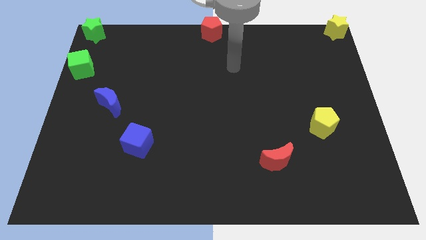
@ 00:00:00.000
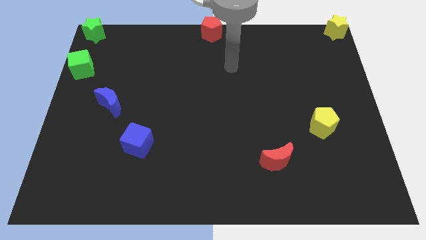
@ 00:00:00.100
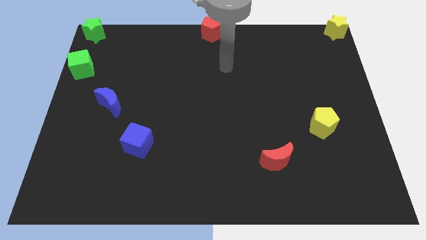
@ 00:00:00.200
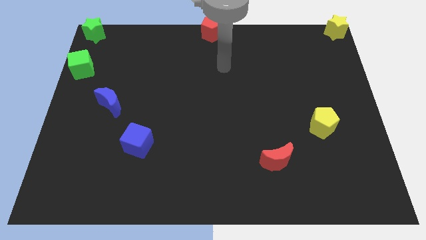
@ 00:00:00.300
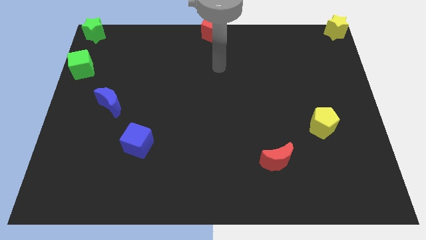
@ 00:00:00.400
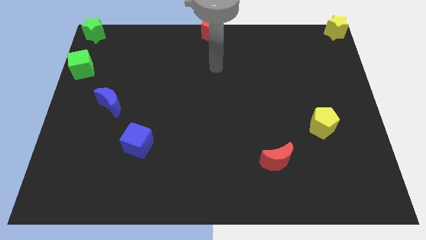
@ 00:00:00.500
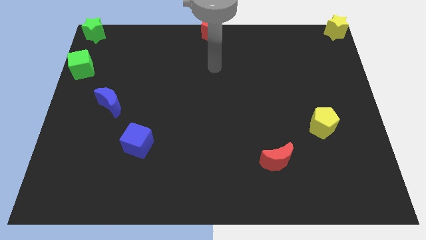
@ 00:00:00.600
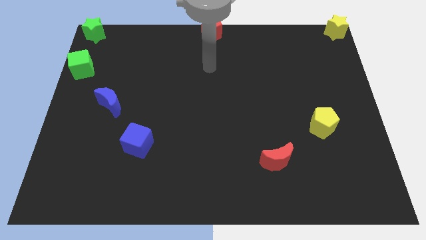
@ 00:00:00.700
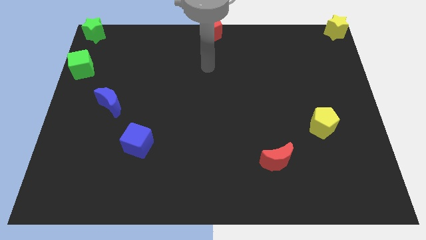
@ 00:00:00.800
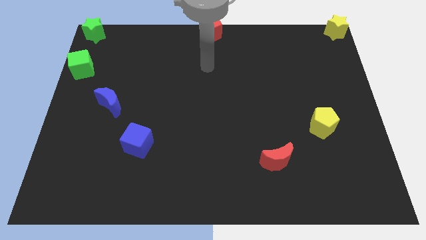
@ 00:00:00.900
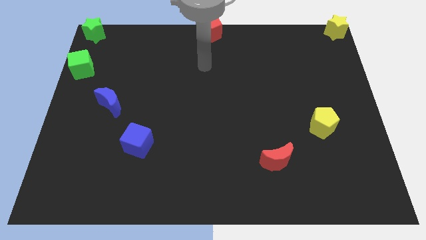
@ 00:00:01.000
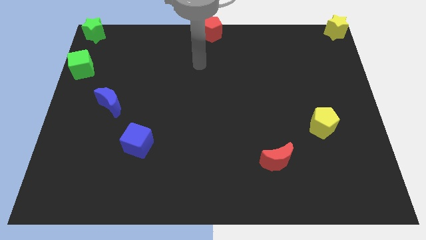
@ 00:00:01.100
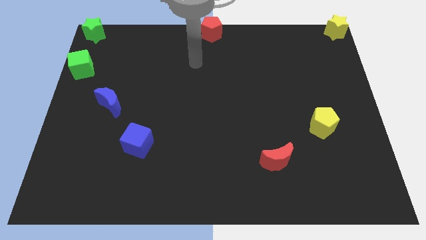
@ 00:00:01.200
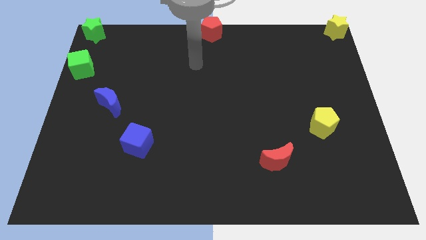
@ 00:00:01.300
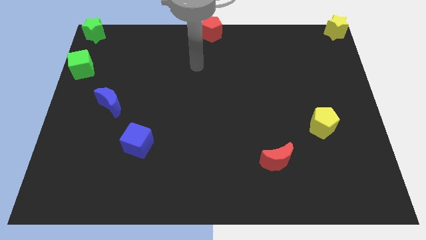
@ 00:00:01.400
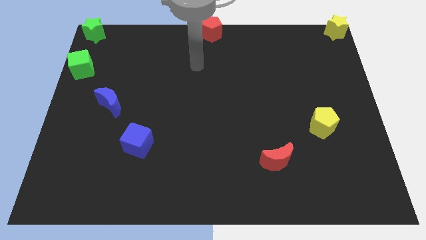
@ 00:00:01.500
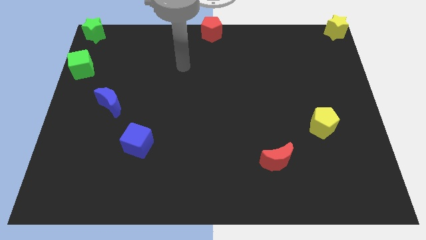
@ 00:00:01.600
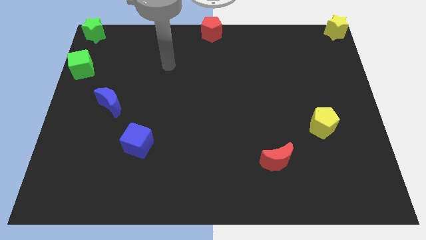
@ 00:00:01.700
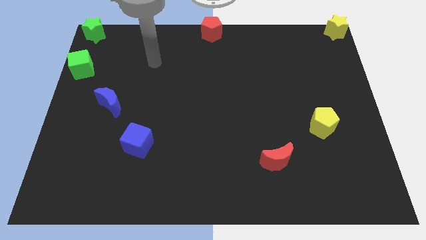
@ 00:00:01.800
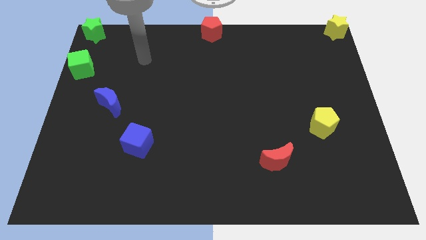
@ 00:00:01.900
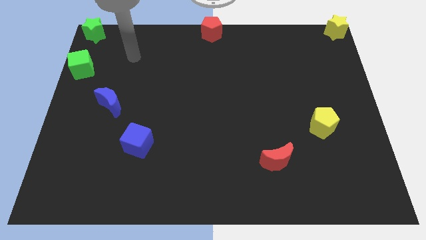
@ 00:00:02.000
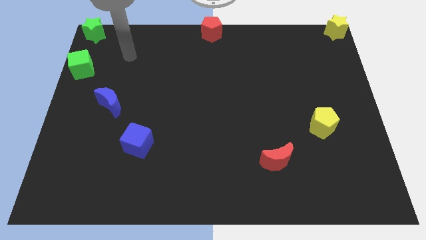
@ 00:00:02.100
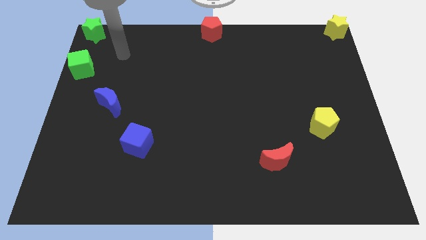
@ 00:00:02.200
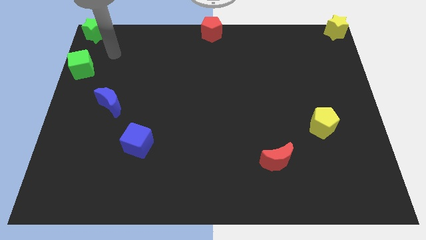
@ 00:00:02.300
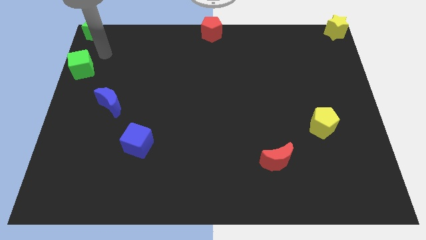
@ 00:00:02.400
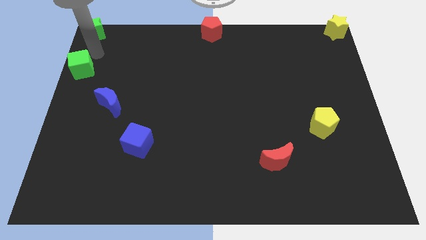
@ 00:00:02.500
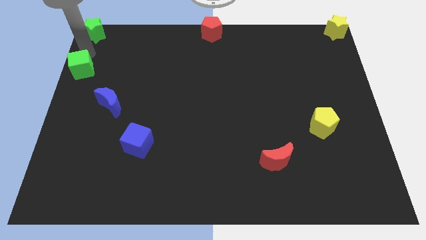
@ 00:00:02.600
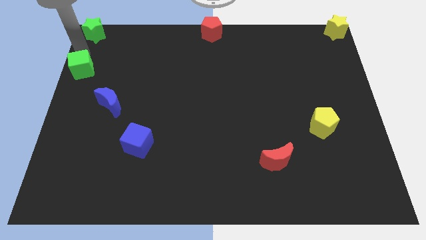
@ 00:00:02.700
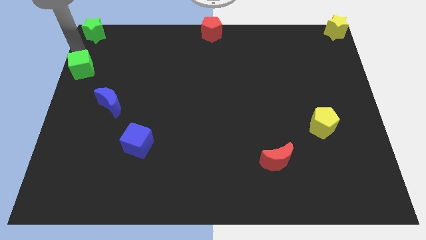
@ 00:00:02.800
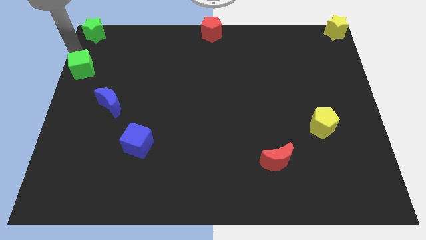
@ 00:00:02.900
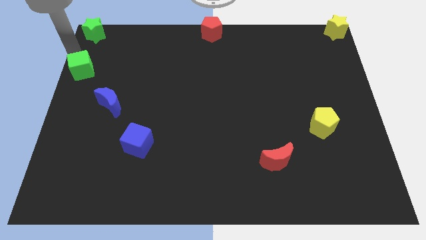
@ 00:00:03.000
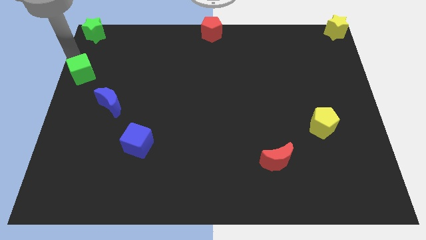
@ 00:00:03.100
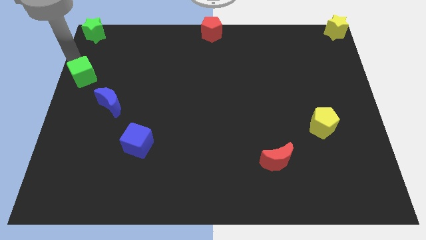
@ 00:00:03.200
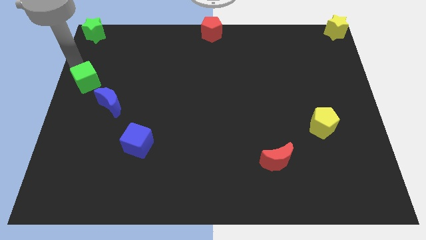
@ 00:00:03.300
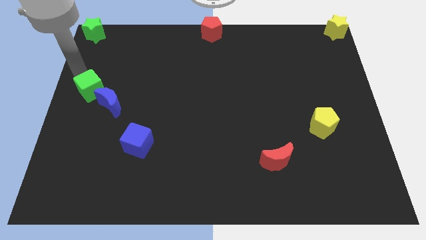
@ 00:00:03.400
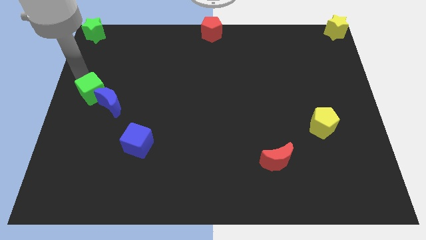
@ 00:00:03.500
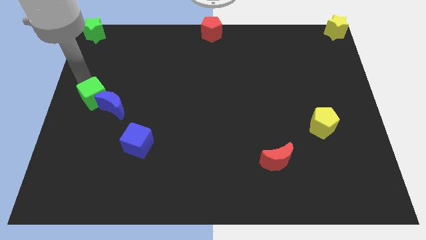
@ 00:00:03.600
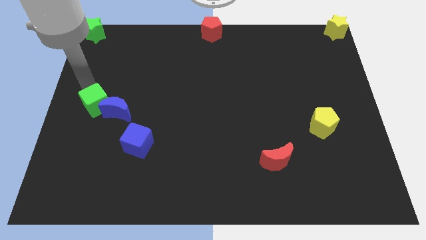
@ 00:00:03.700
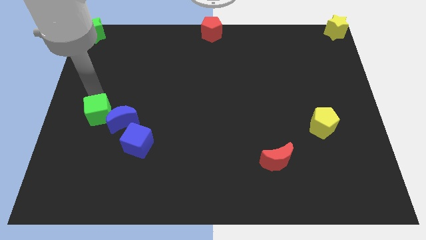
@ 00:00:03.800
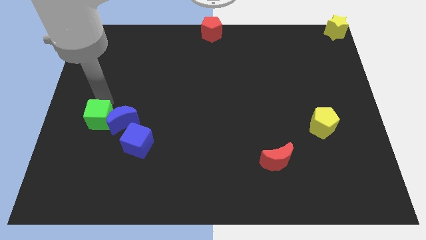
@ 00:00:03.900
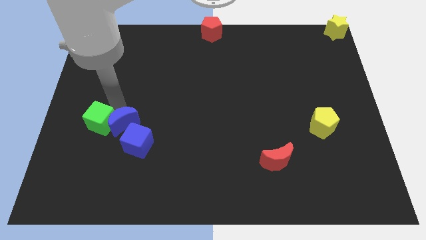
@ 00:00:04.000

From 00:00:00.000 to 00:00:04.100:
move the green cube into the blue moon

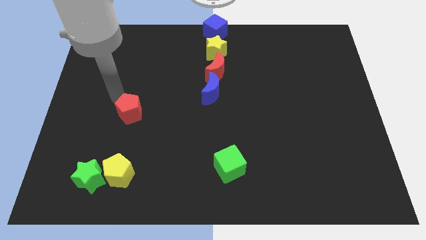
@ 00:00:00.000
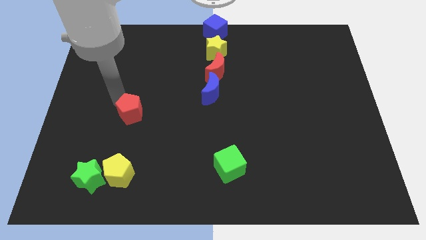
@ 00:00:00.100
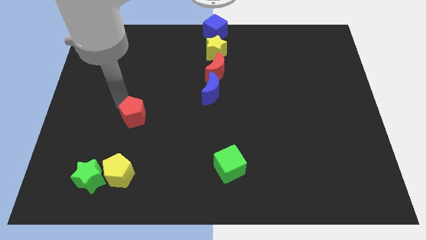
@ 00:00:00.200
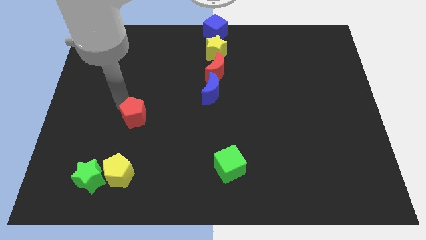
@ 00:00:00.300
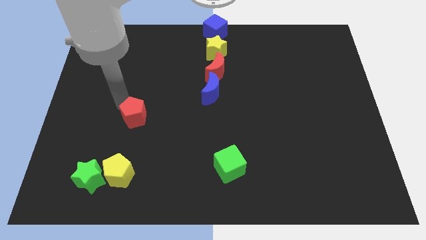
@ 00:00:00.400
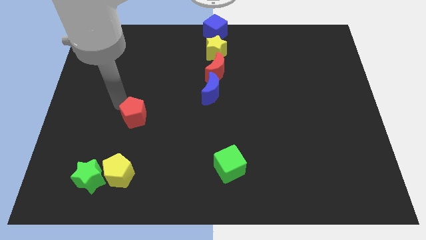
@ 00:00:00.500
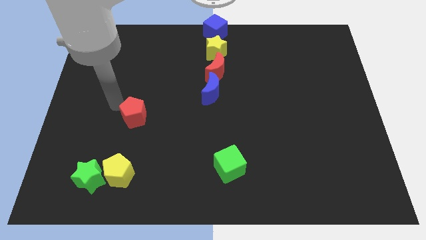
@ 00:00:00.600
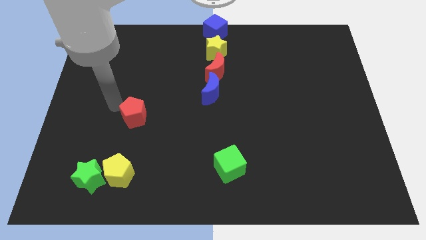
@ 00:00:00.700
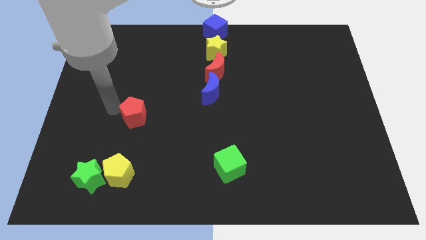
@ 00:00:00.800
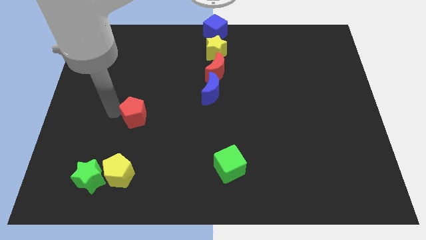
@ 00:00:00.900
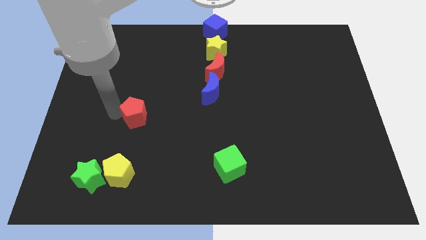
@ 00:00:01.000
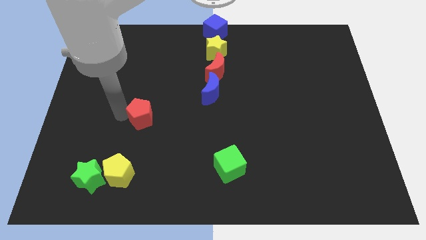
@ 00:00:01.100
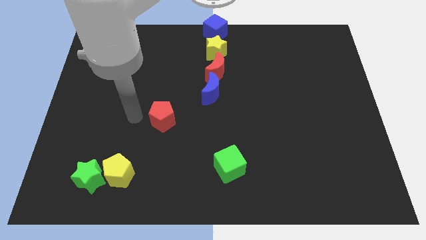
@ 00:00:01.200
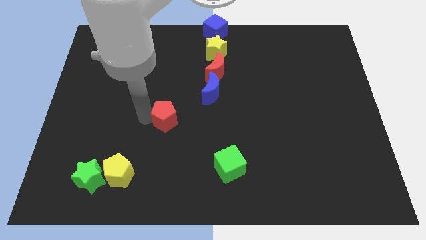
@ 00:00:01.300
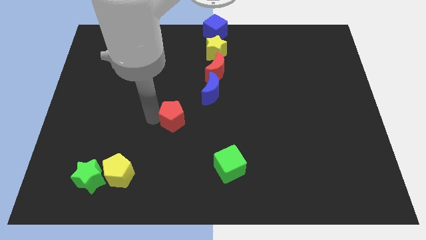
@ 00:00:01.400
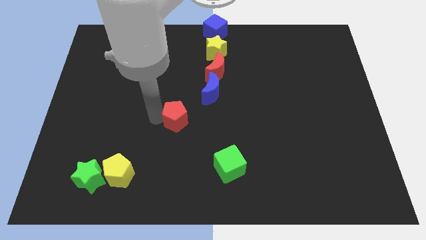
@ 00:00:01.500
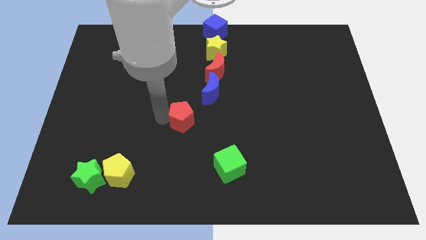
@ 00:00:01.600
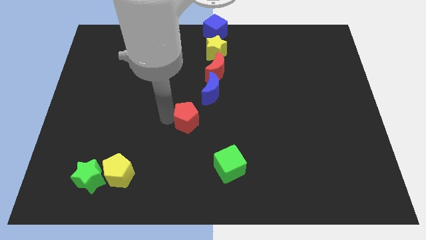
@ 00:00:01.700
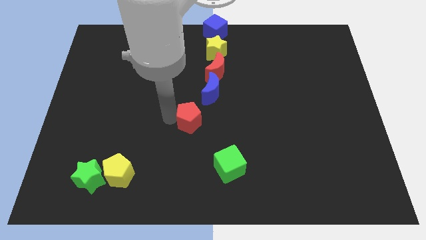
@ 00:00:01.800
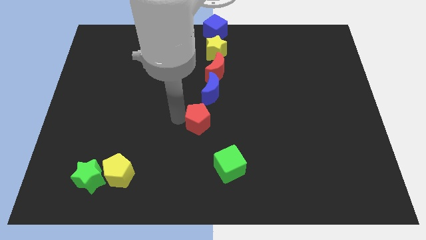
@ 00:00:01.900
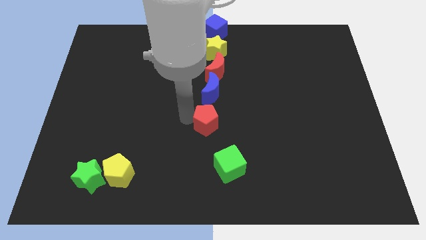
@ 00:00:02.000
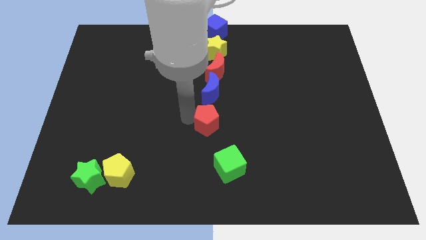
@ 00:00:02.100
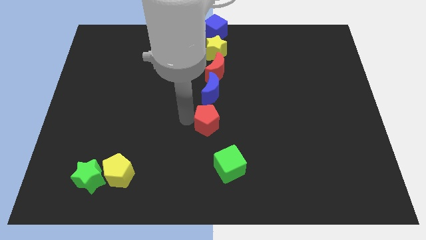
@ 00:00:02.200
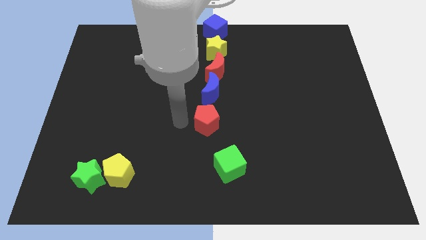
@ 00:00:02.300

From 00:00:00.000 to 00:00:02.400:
place the red pentagon below the blue moon

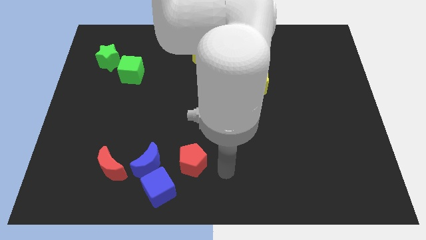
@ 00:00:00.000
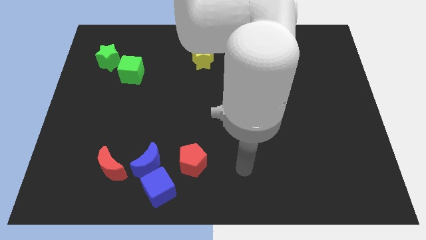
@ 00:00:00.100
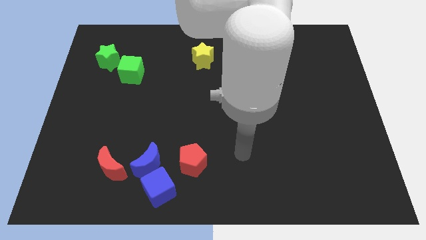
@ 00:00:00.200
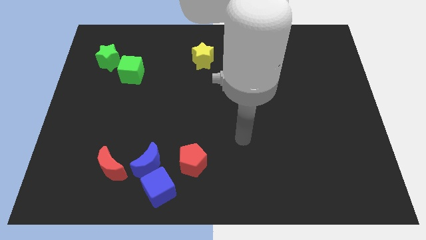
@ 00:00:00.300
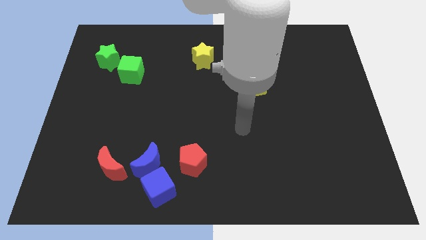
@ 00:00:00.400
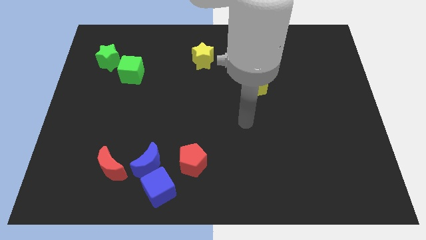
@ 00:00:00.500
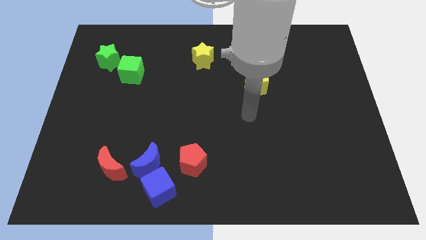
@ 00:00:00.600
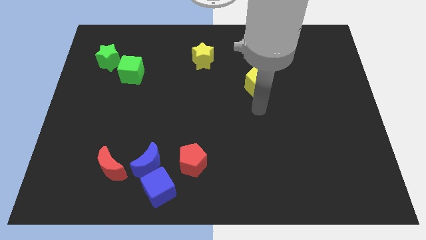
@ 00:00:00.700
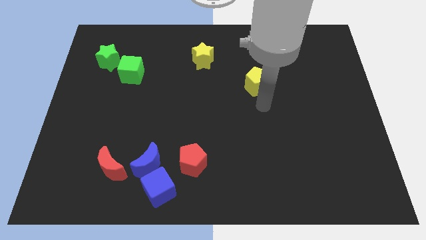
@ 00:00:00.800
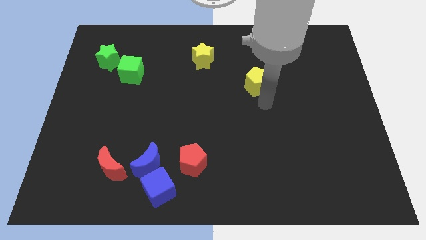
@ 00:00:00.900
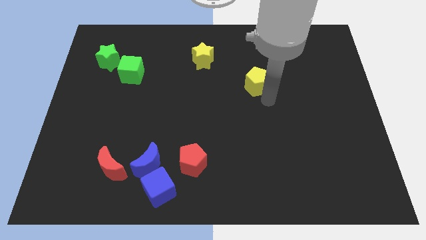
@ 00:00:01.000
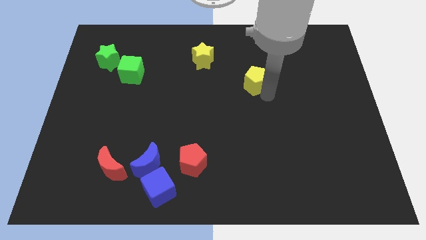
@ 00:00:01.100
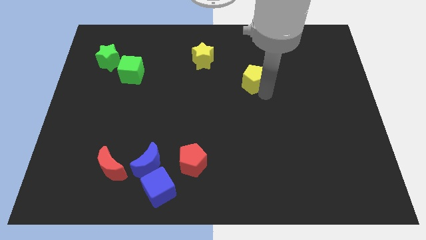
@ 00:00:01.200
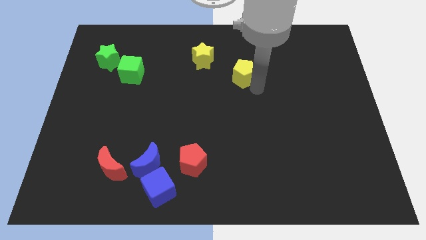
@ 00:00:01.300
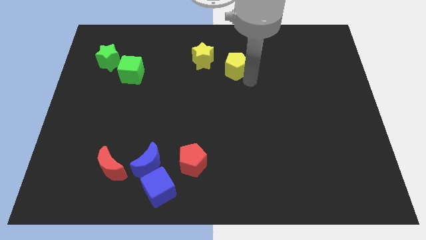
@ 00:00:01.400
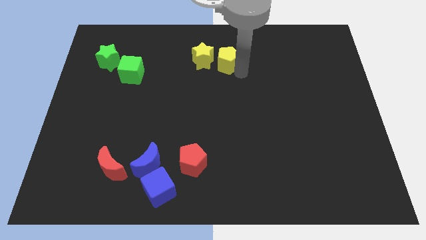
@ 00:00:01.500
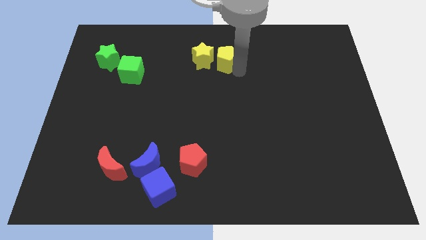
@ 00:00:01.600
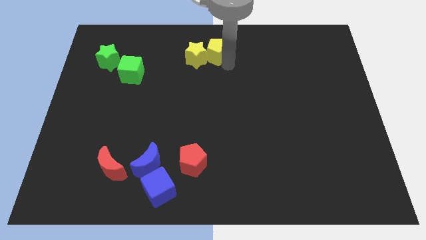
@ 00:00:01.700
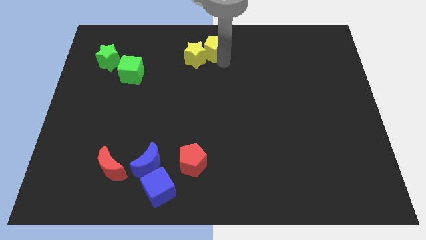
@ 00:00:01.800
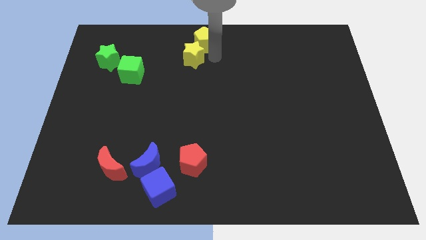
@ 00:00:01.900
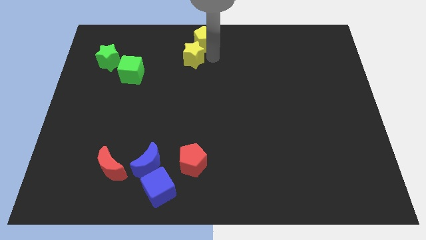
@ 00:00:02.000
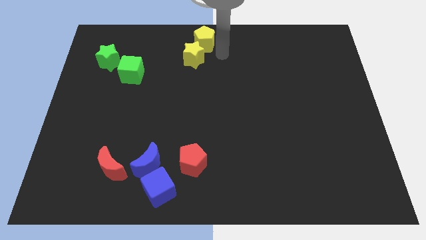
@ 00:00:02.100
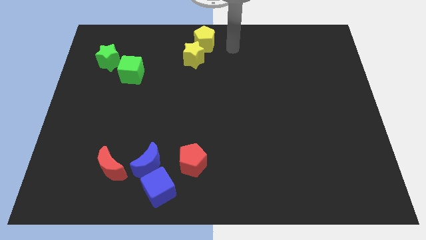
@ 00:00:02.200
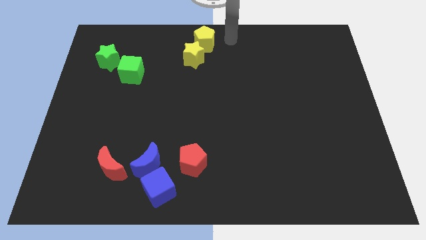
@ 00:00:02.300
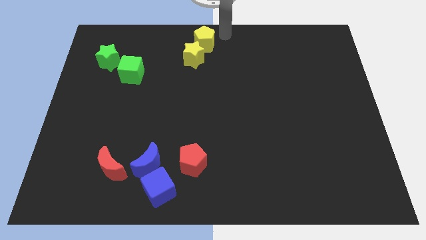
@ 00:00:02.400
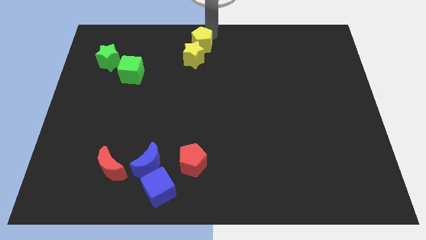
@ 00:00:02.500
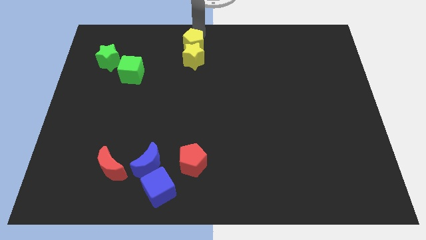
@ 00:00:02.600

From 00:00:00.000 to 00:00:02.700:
place the yellow pentagon above the yellow star
